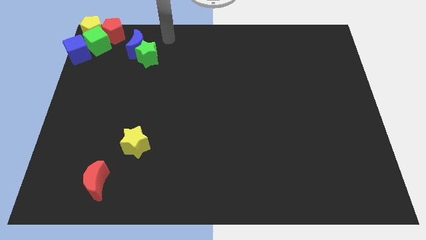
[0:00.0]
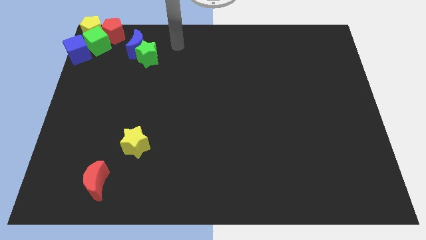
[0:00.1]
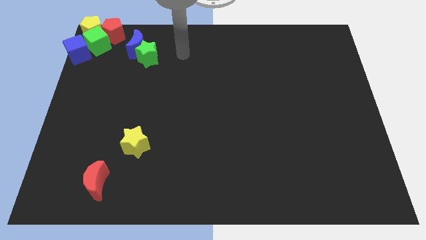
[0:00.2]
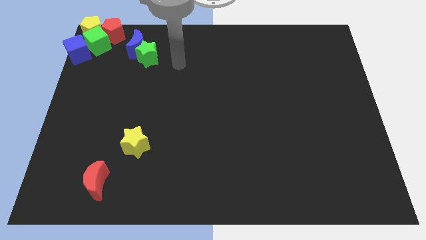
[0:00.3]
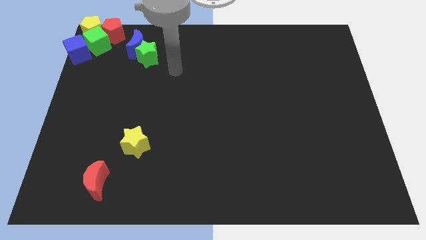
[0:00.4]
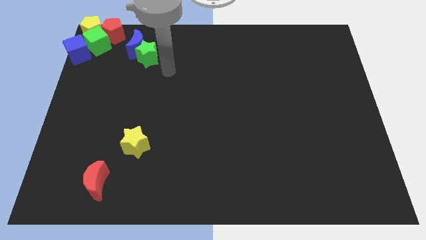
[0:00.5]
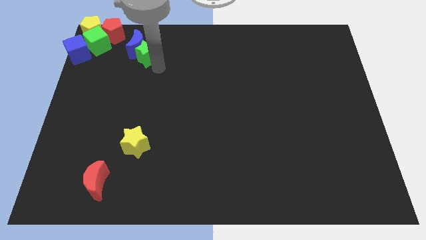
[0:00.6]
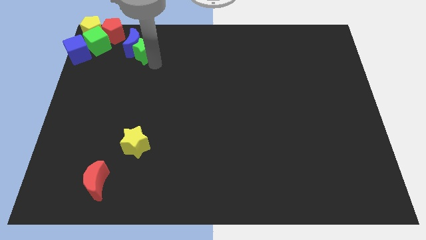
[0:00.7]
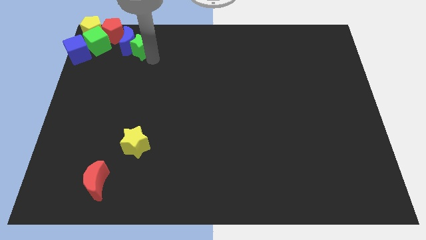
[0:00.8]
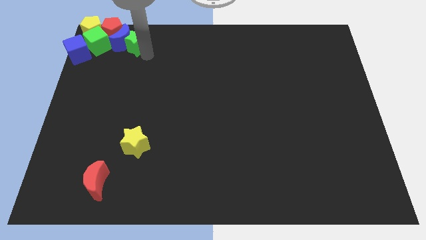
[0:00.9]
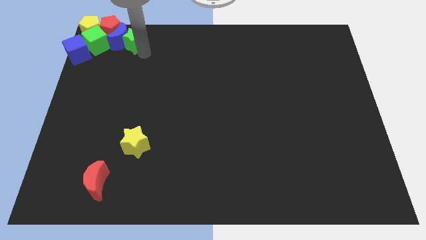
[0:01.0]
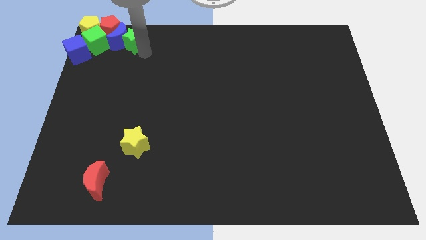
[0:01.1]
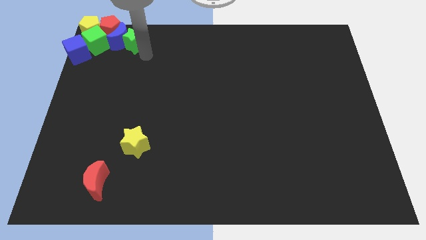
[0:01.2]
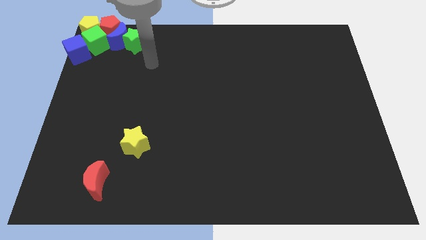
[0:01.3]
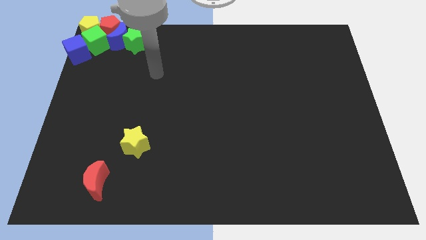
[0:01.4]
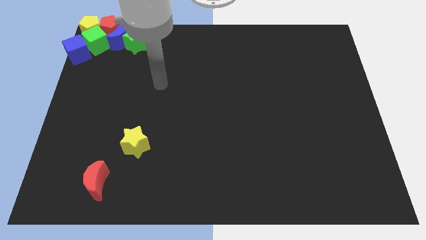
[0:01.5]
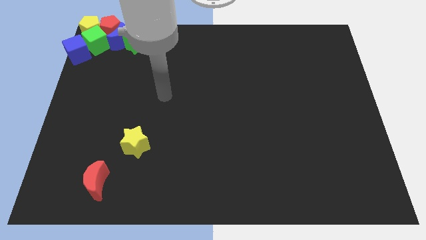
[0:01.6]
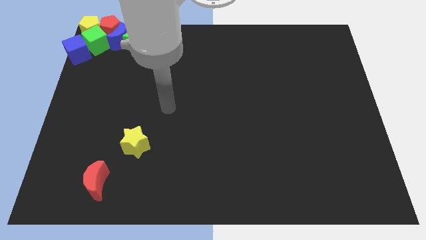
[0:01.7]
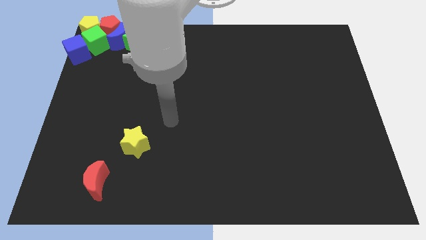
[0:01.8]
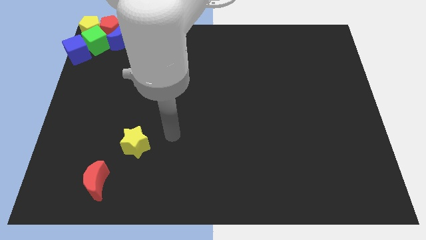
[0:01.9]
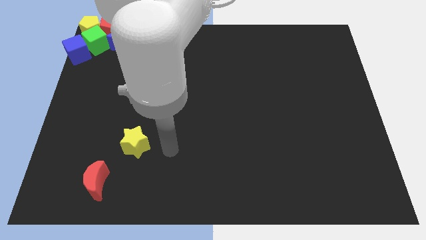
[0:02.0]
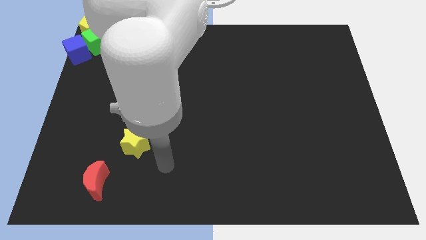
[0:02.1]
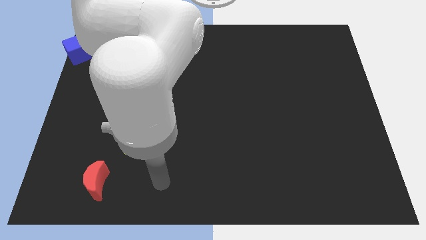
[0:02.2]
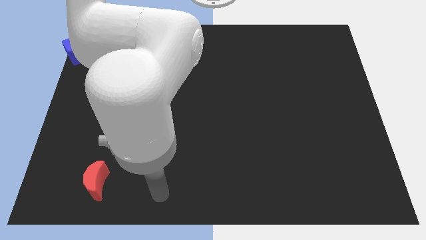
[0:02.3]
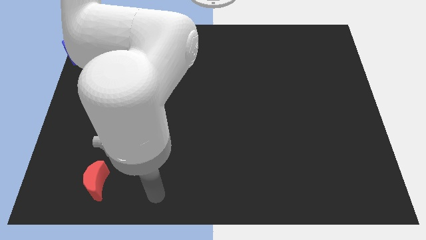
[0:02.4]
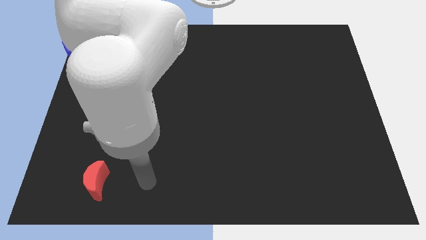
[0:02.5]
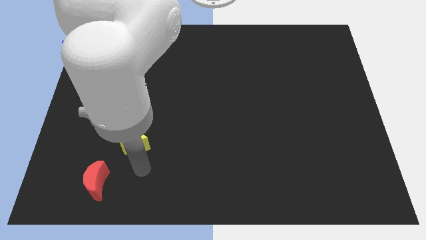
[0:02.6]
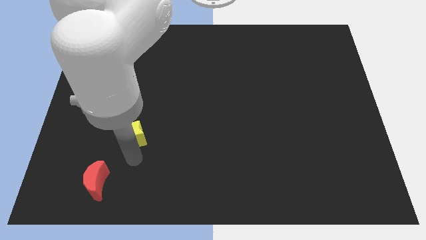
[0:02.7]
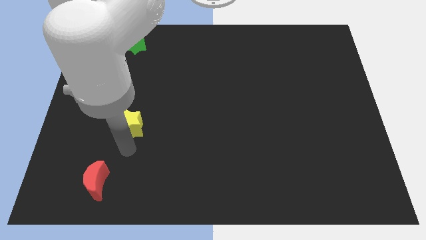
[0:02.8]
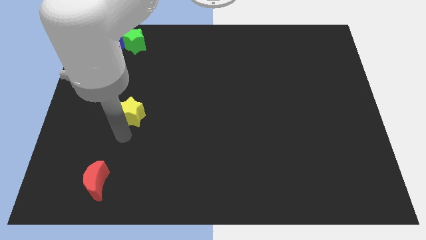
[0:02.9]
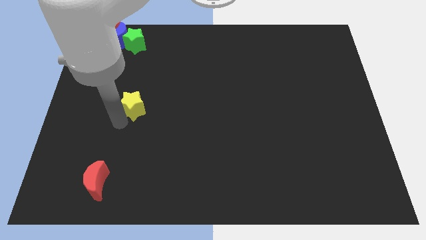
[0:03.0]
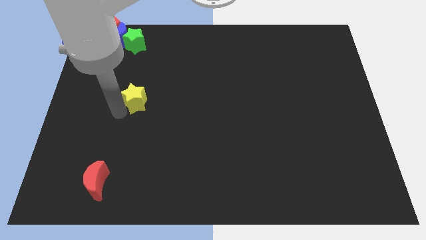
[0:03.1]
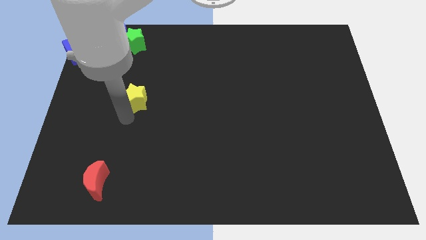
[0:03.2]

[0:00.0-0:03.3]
move arm near yellow star

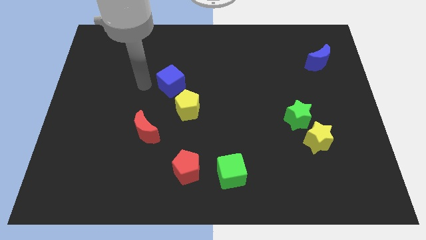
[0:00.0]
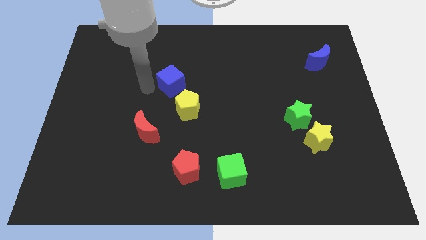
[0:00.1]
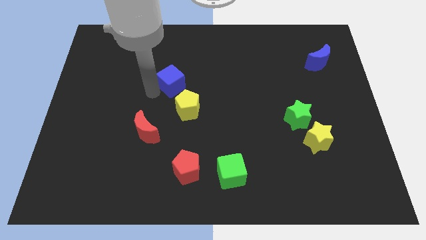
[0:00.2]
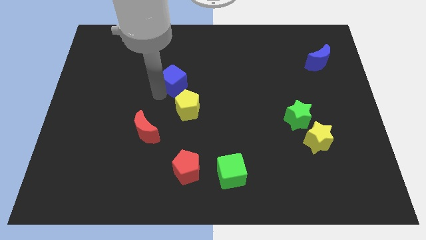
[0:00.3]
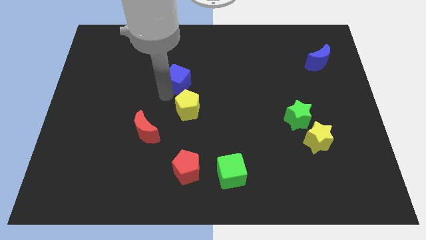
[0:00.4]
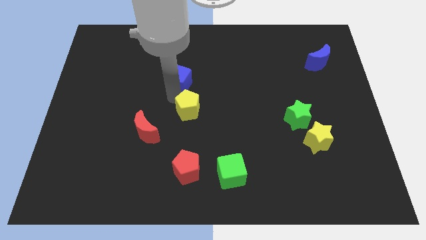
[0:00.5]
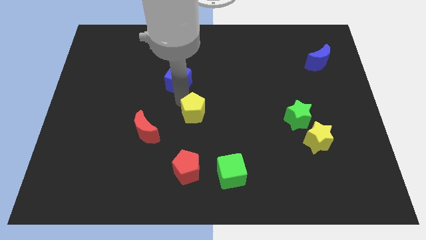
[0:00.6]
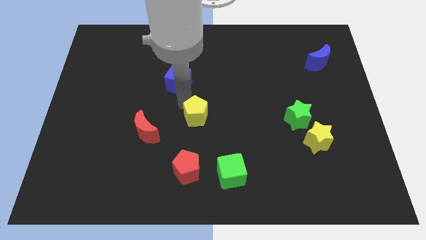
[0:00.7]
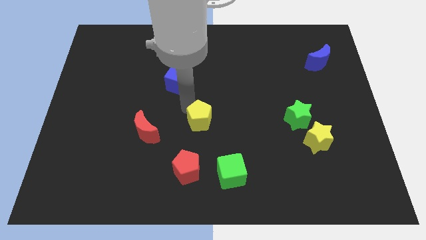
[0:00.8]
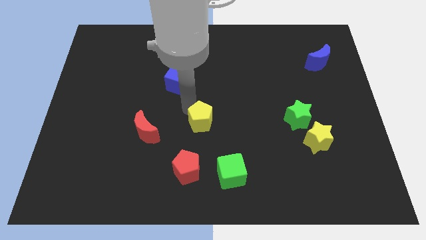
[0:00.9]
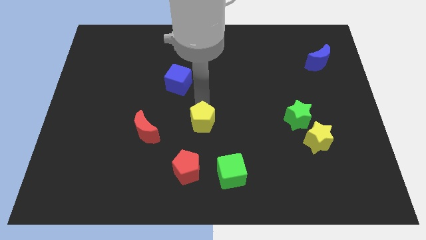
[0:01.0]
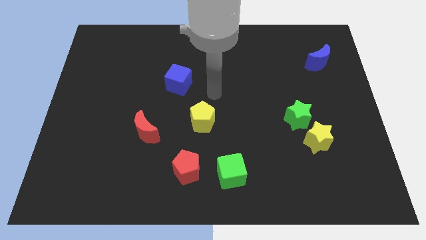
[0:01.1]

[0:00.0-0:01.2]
move yellow pentagon away from blue cube

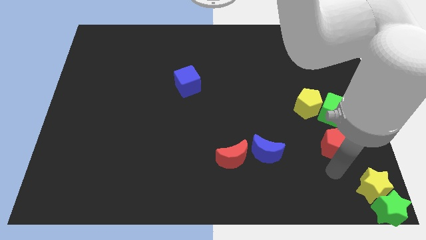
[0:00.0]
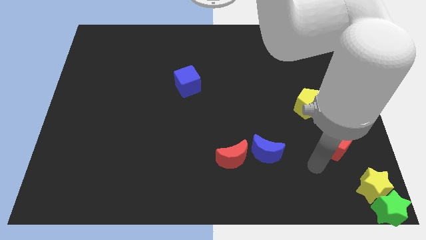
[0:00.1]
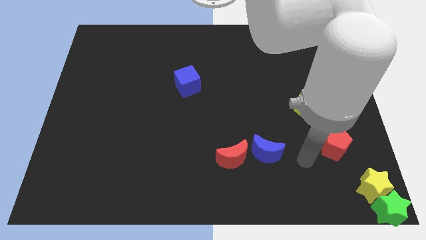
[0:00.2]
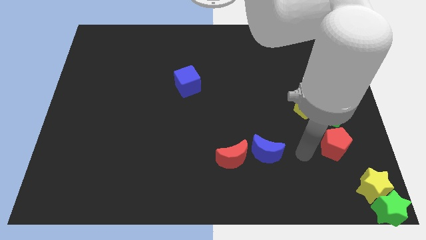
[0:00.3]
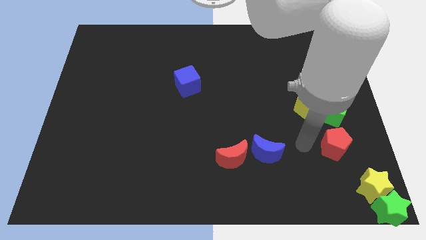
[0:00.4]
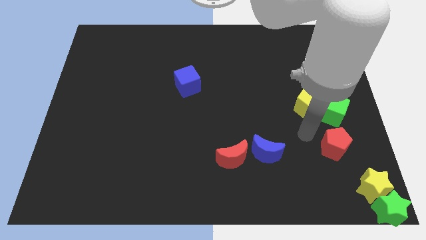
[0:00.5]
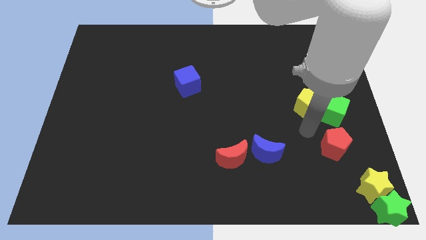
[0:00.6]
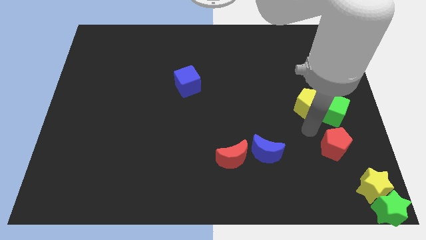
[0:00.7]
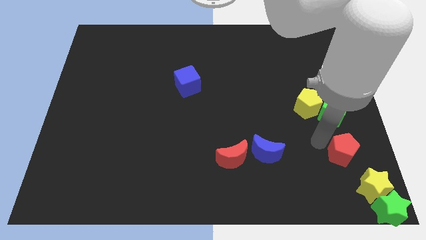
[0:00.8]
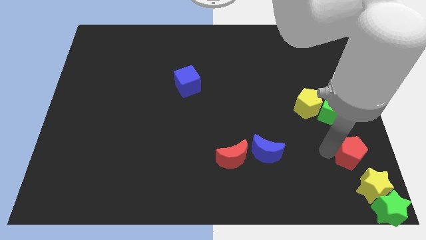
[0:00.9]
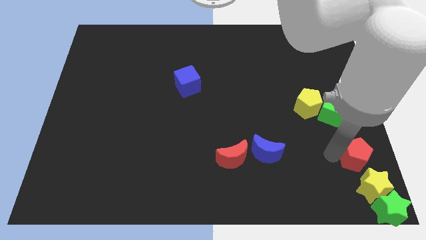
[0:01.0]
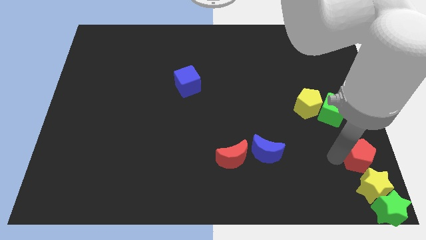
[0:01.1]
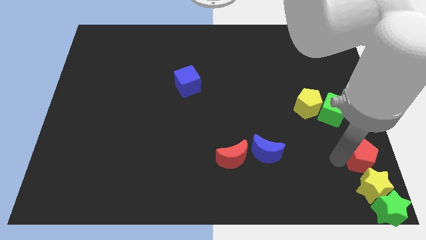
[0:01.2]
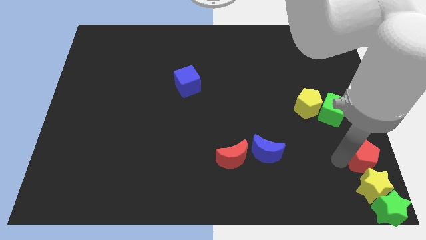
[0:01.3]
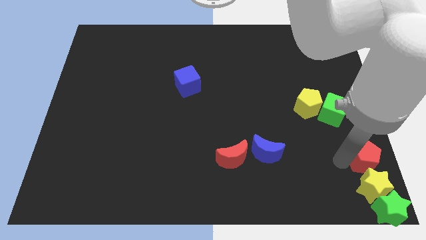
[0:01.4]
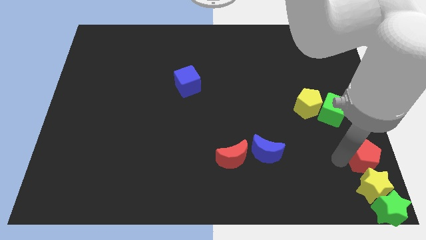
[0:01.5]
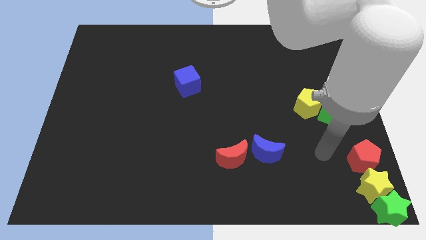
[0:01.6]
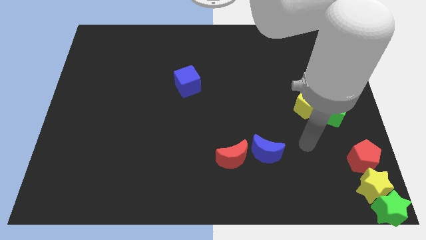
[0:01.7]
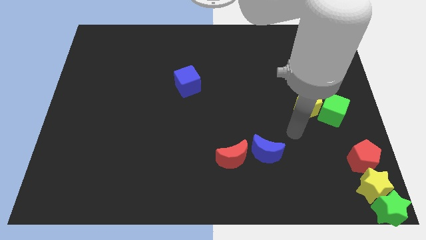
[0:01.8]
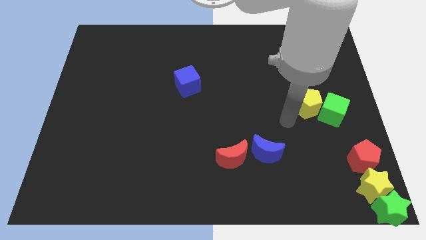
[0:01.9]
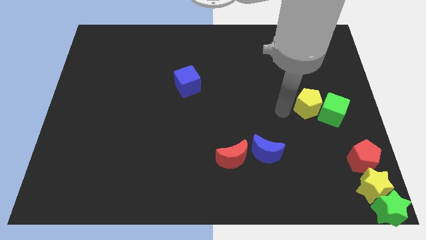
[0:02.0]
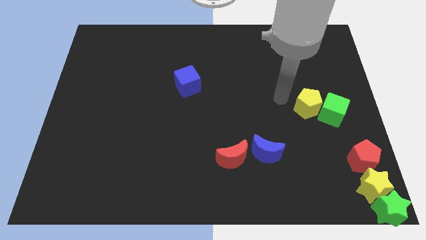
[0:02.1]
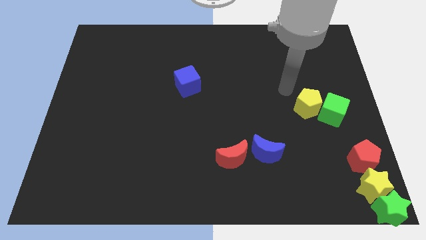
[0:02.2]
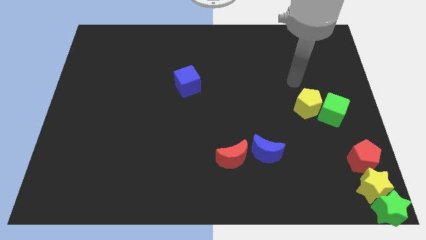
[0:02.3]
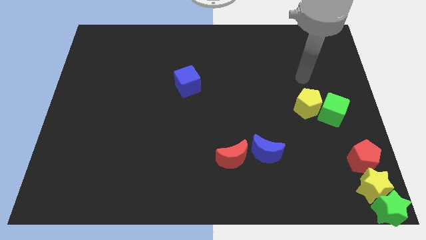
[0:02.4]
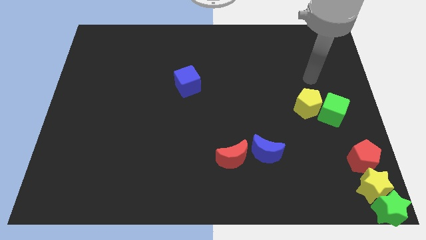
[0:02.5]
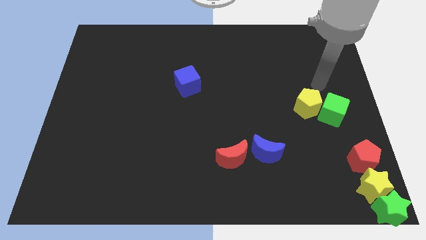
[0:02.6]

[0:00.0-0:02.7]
place the red pentagon above the yellow star

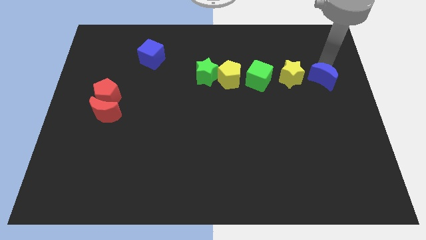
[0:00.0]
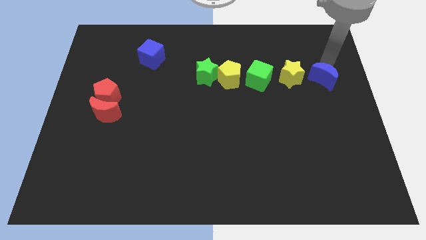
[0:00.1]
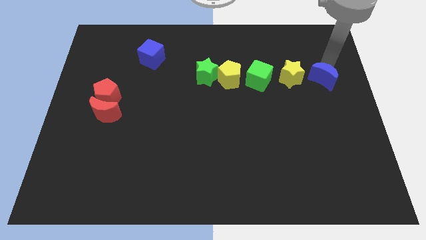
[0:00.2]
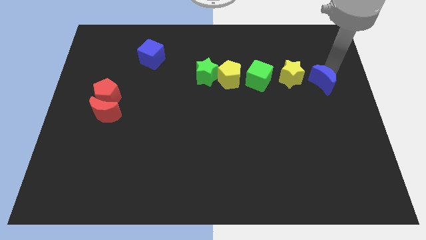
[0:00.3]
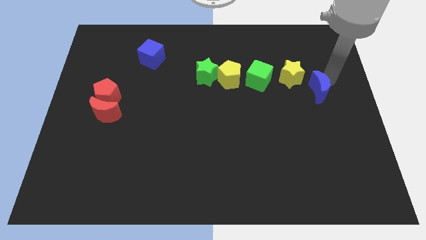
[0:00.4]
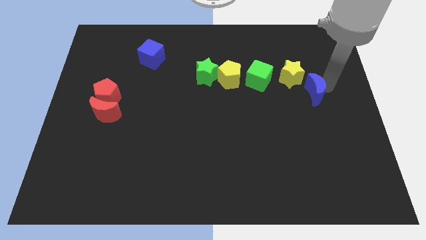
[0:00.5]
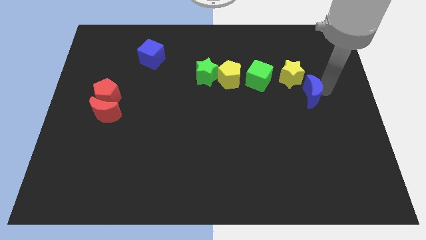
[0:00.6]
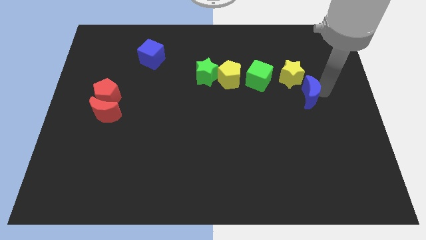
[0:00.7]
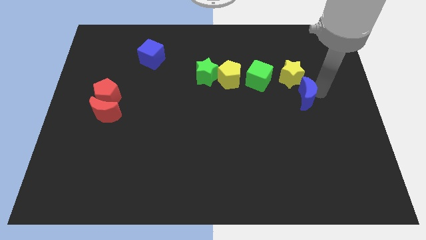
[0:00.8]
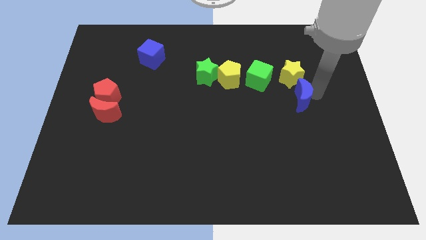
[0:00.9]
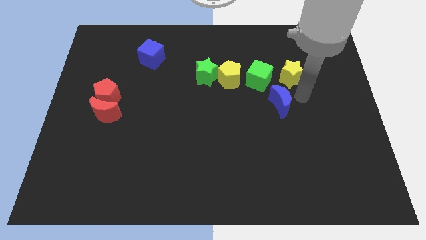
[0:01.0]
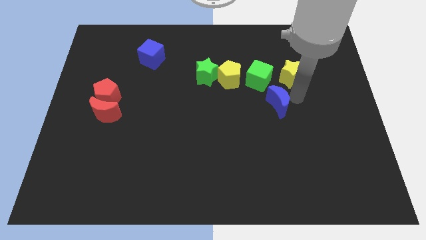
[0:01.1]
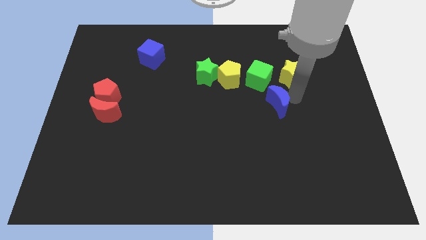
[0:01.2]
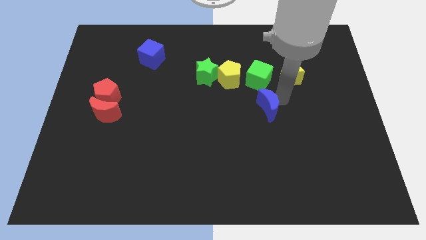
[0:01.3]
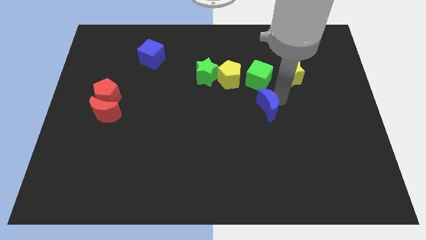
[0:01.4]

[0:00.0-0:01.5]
move the blue moon to the bottom side of the green cube

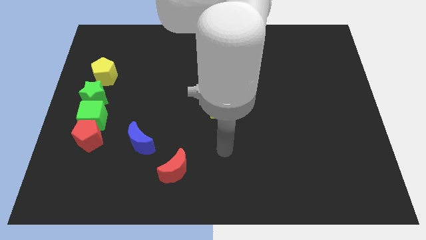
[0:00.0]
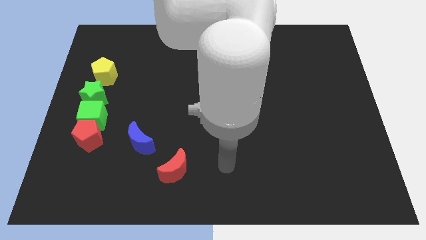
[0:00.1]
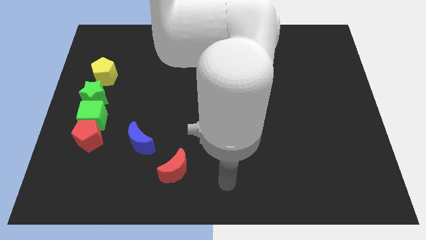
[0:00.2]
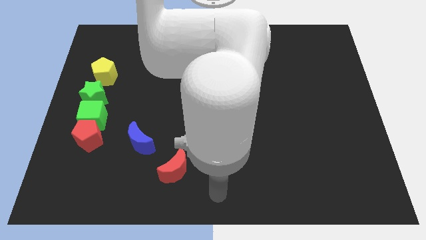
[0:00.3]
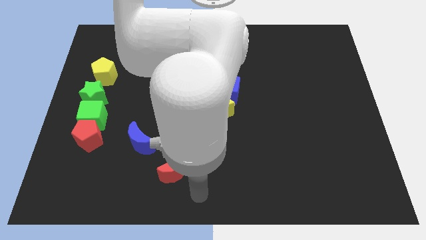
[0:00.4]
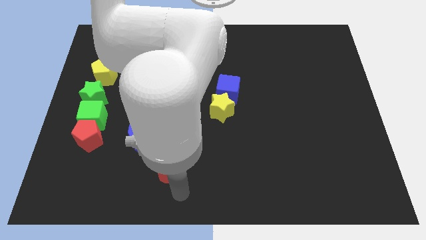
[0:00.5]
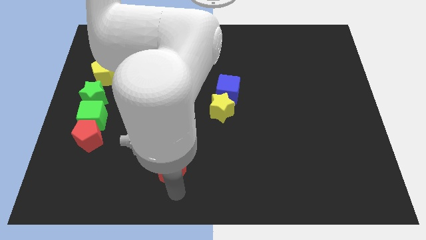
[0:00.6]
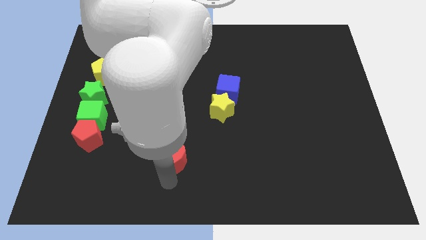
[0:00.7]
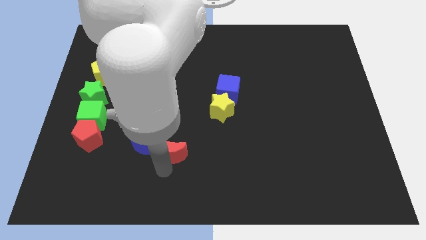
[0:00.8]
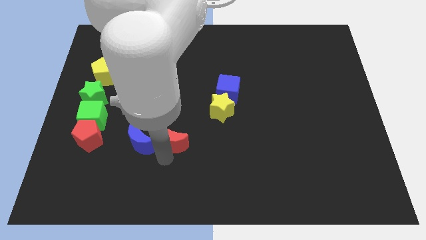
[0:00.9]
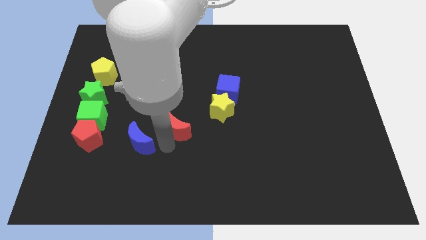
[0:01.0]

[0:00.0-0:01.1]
place red moon to the right of the blue moon
